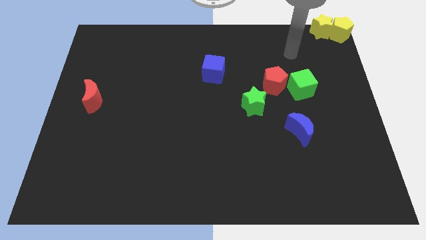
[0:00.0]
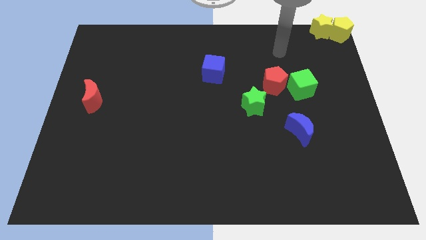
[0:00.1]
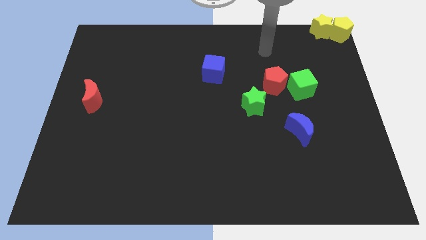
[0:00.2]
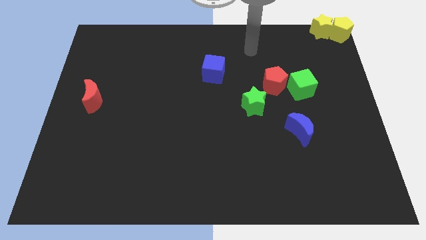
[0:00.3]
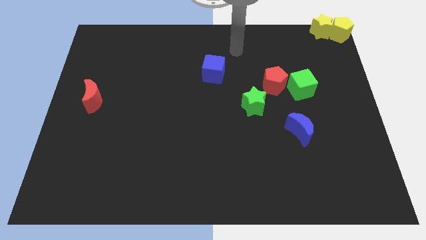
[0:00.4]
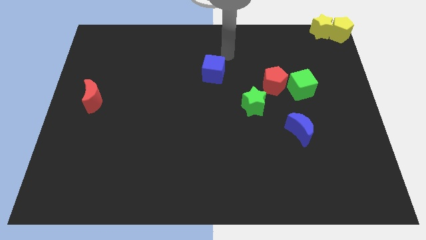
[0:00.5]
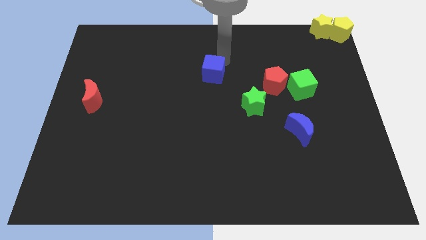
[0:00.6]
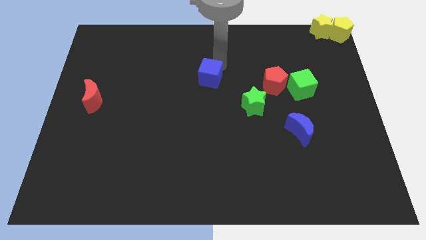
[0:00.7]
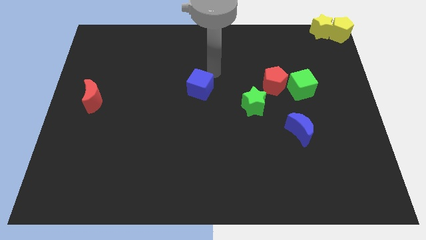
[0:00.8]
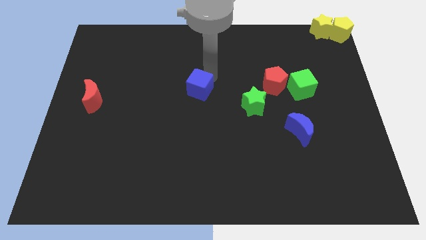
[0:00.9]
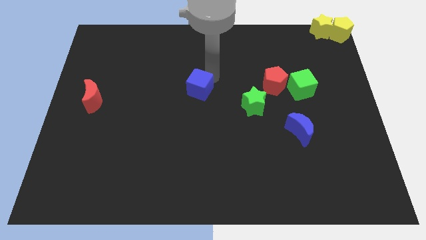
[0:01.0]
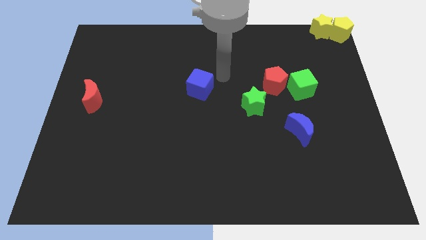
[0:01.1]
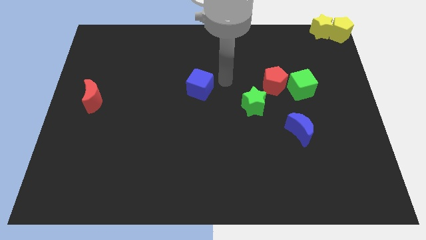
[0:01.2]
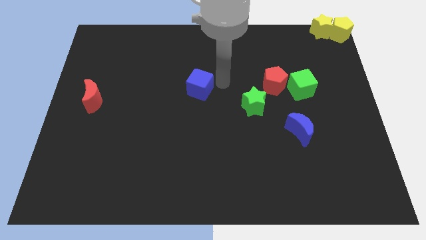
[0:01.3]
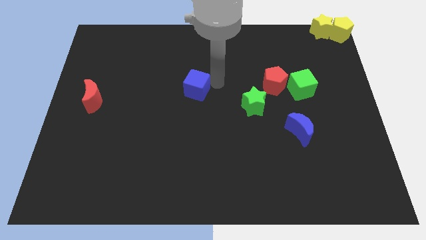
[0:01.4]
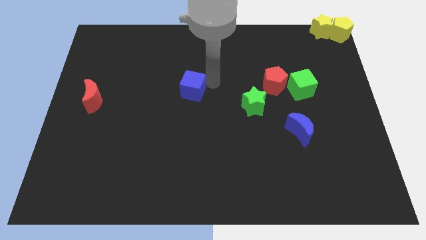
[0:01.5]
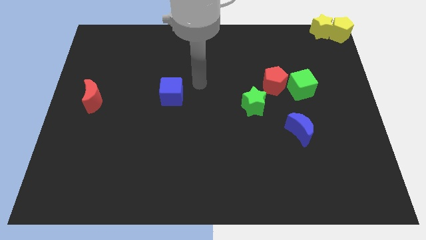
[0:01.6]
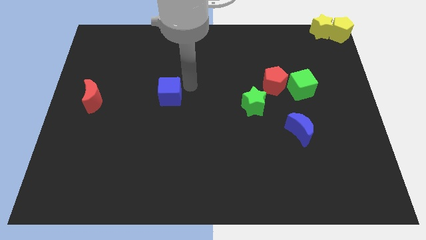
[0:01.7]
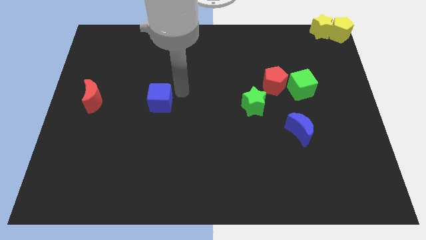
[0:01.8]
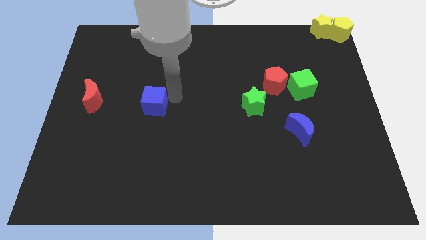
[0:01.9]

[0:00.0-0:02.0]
move the blue cube to the right of red moon

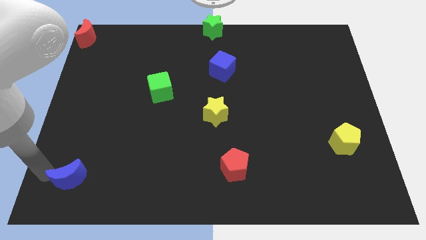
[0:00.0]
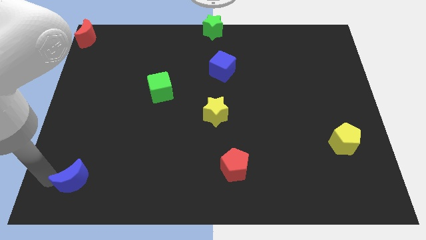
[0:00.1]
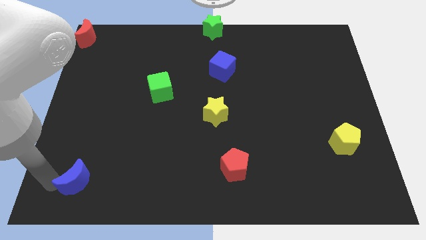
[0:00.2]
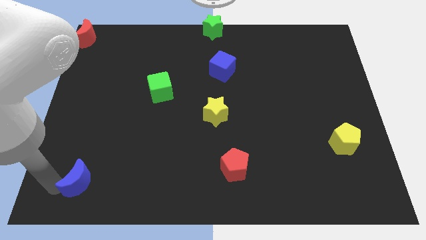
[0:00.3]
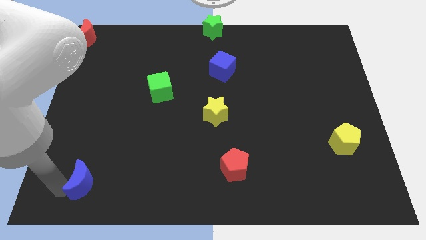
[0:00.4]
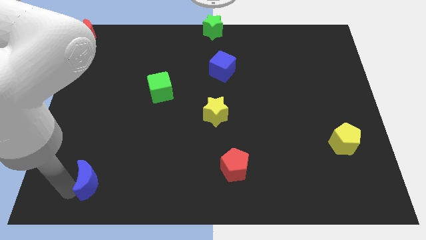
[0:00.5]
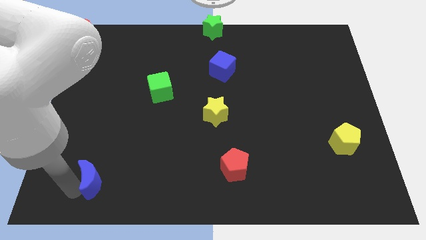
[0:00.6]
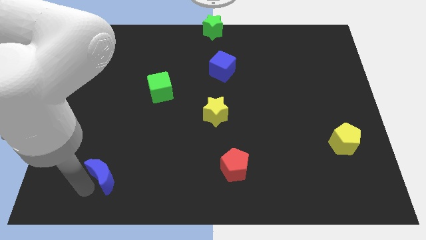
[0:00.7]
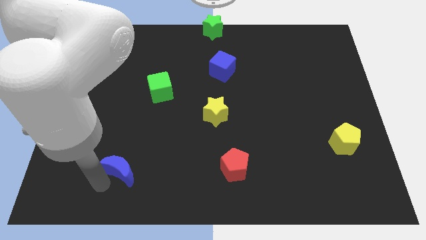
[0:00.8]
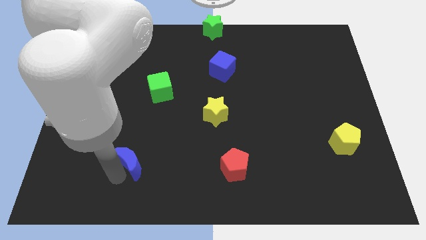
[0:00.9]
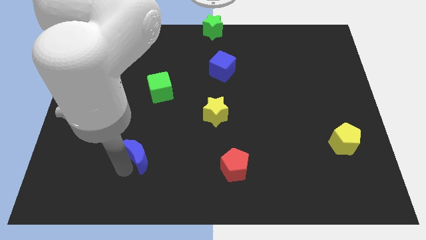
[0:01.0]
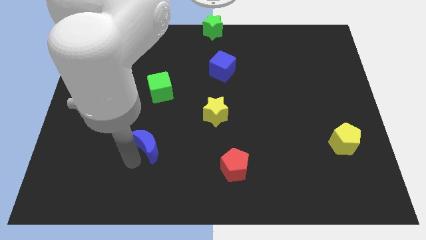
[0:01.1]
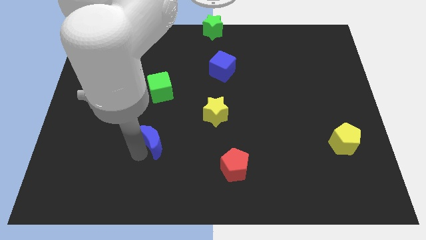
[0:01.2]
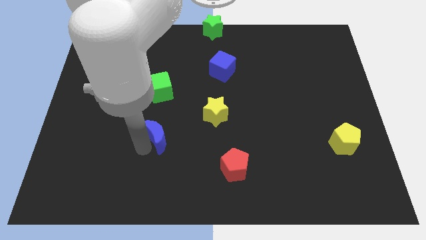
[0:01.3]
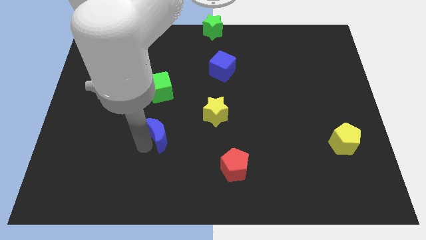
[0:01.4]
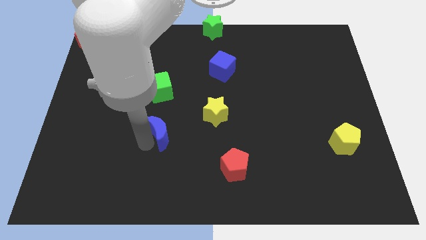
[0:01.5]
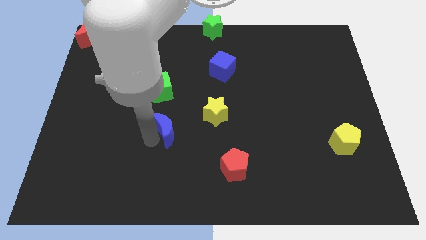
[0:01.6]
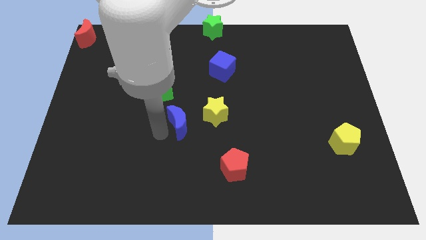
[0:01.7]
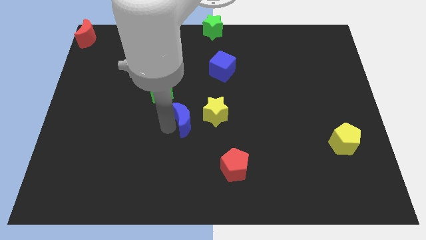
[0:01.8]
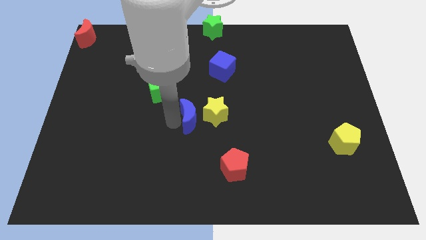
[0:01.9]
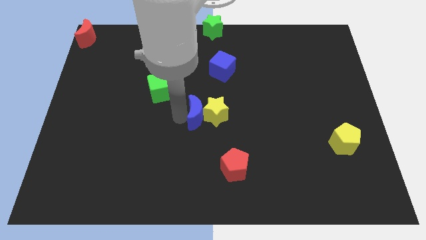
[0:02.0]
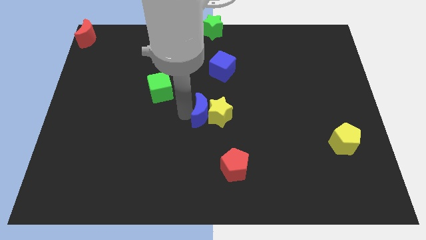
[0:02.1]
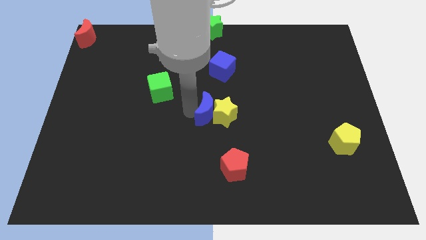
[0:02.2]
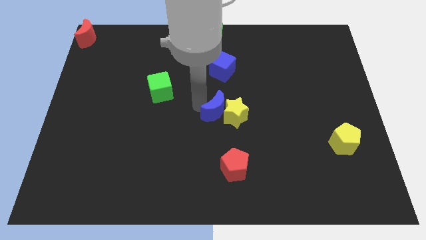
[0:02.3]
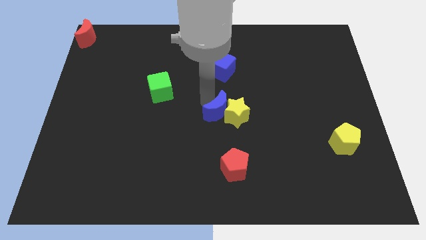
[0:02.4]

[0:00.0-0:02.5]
push the blue crescent to the center of the board

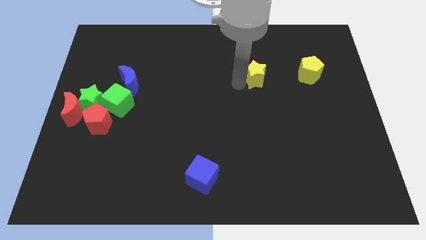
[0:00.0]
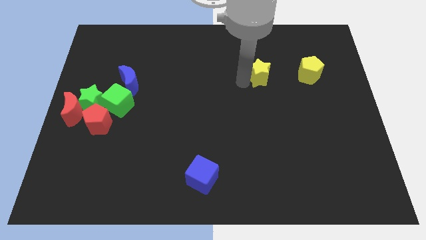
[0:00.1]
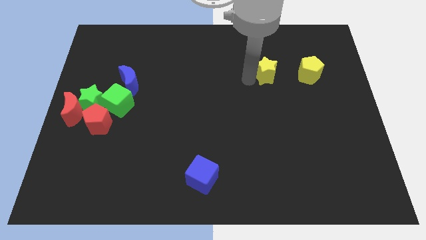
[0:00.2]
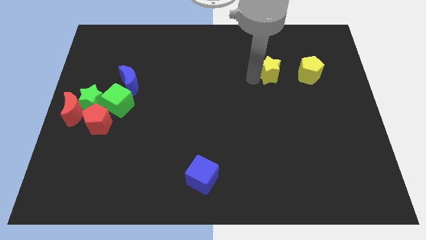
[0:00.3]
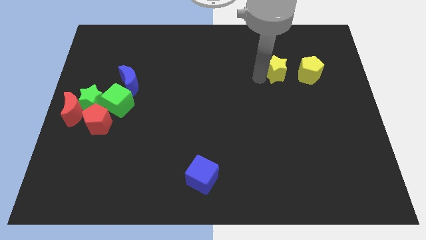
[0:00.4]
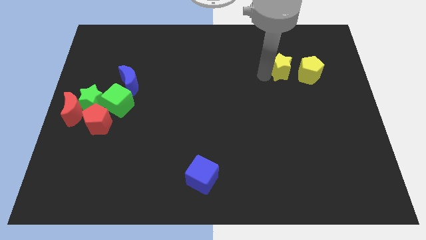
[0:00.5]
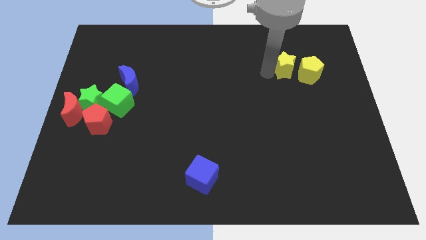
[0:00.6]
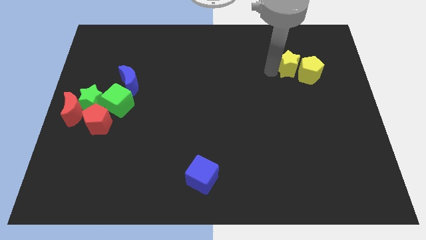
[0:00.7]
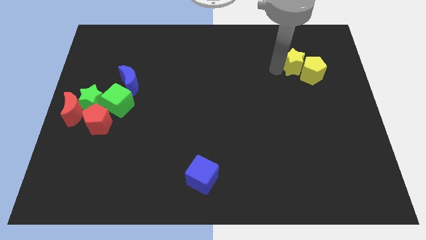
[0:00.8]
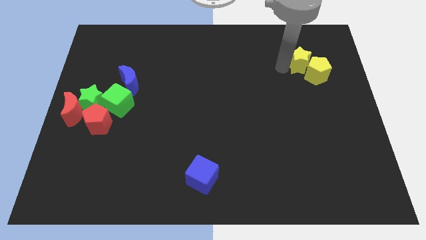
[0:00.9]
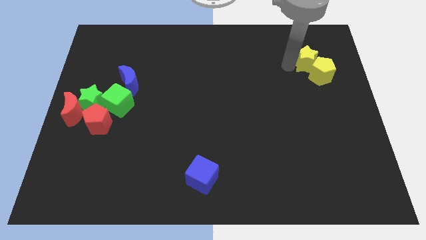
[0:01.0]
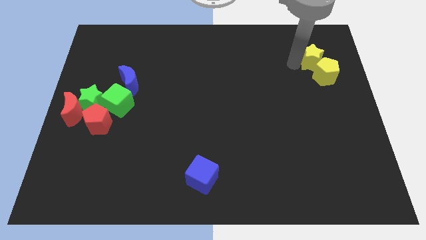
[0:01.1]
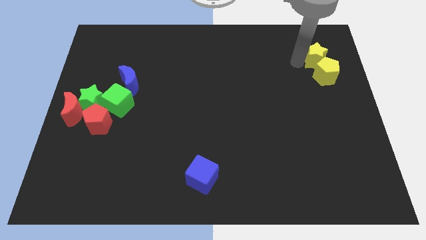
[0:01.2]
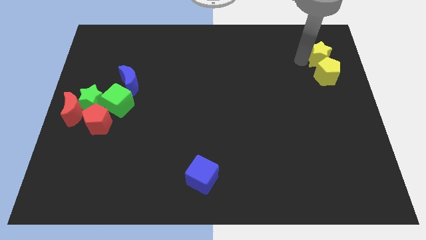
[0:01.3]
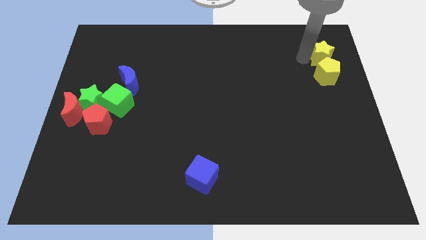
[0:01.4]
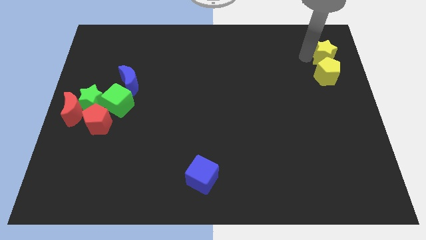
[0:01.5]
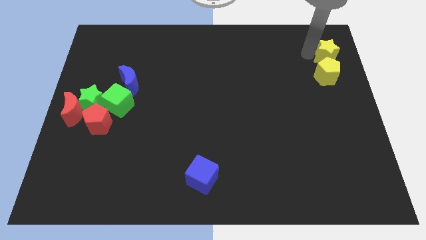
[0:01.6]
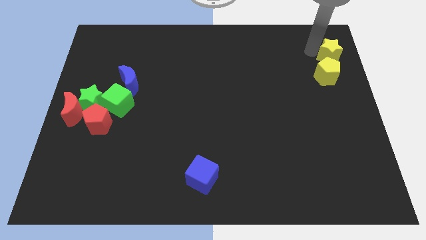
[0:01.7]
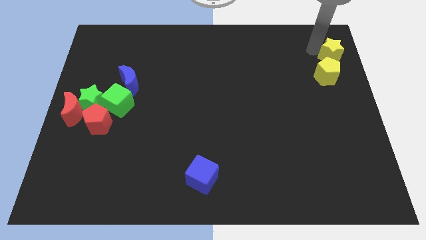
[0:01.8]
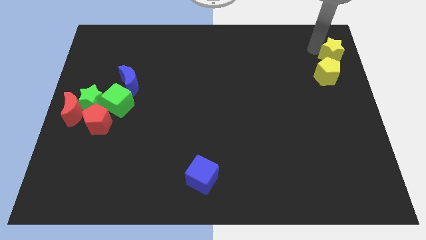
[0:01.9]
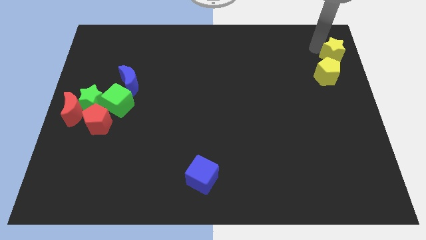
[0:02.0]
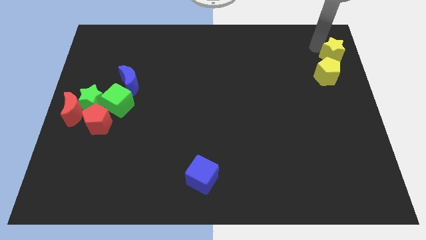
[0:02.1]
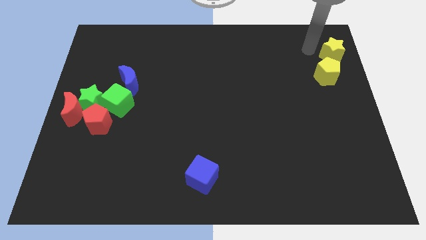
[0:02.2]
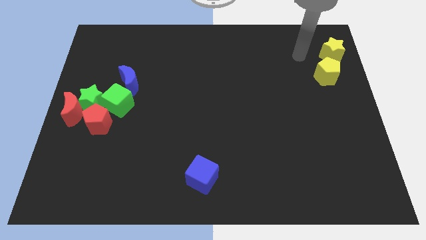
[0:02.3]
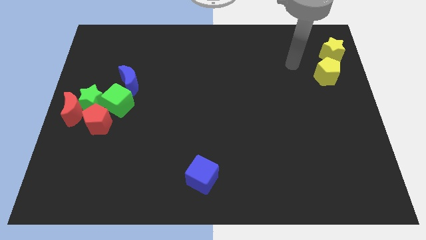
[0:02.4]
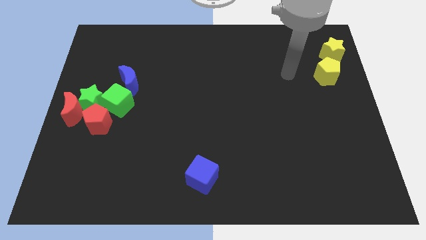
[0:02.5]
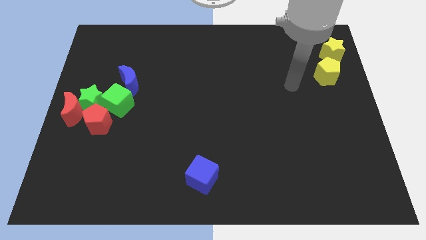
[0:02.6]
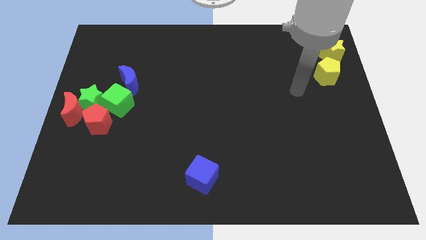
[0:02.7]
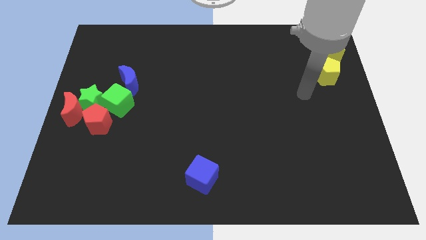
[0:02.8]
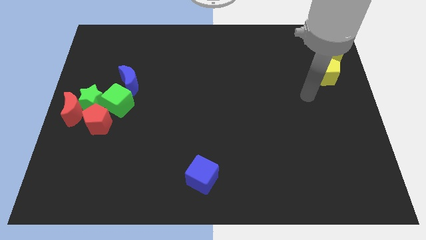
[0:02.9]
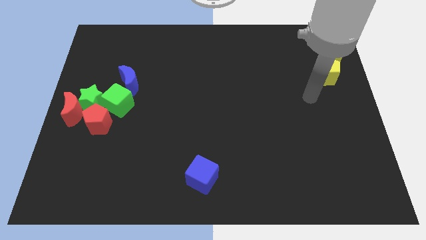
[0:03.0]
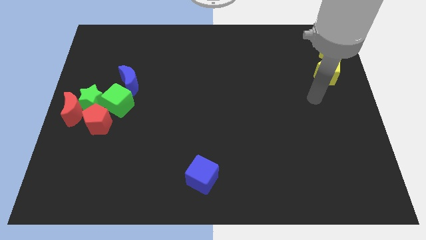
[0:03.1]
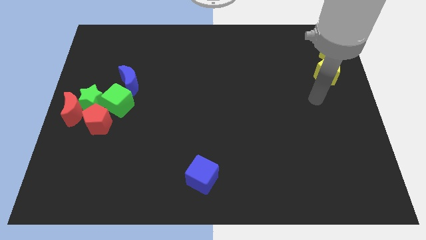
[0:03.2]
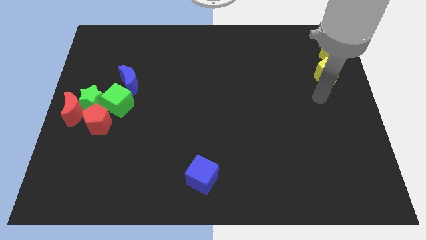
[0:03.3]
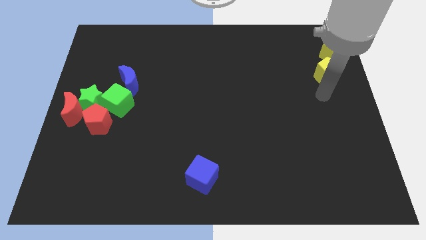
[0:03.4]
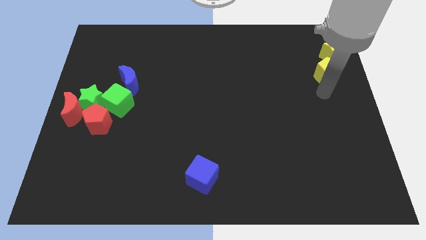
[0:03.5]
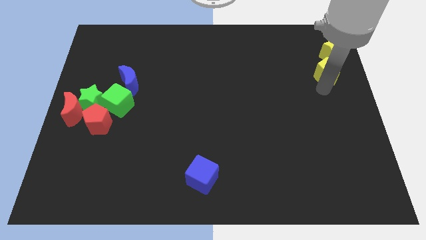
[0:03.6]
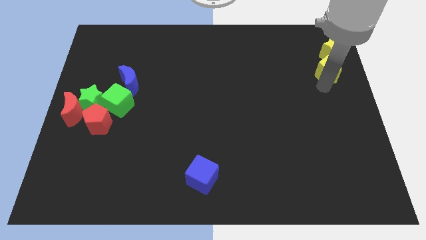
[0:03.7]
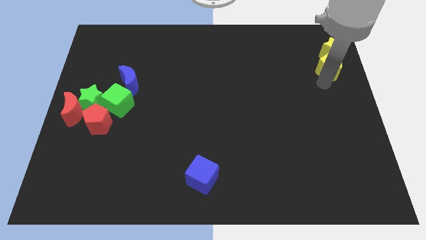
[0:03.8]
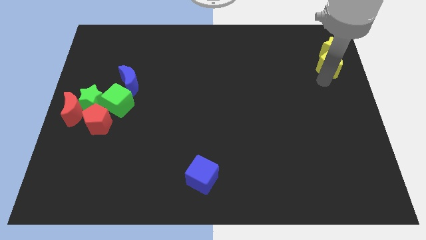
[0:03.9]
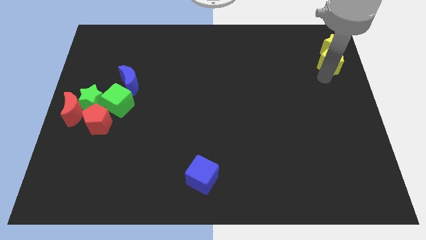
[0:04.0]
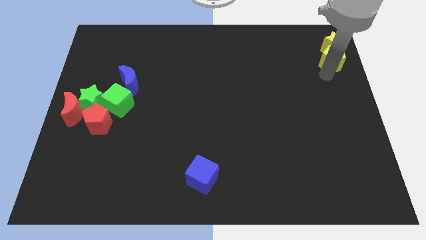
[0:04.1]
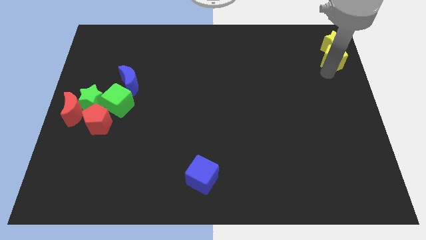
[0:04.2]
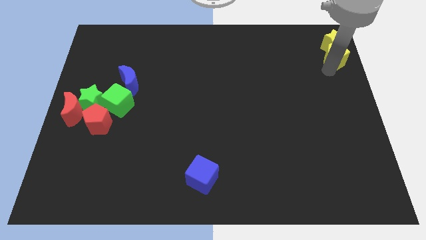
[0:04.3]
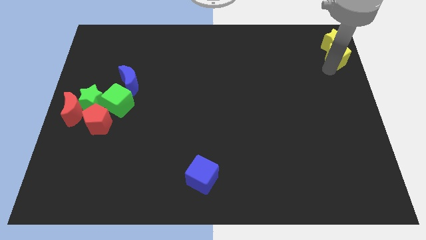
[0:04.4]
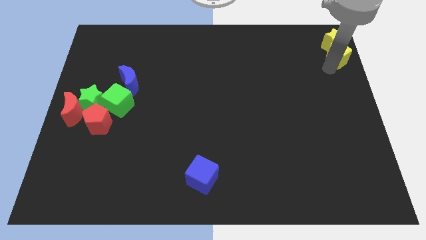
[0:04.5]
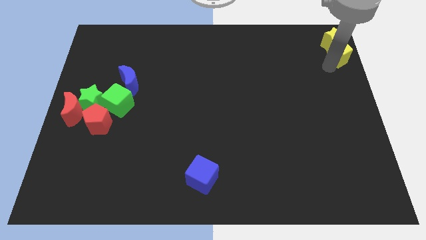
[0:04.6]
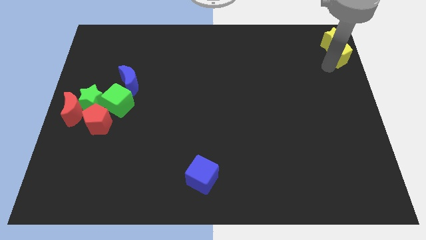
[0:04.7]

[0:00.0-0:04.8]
group up the yellow blocks at the top right corner
